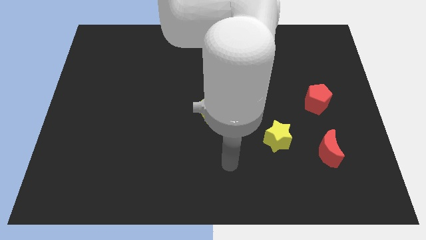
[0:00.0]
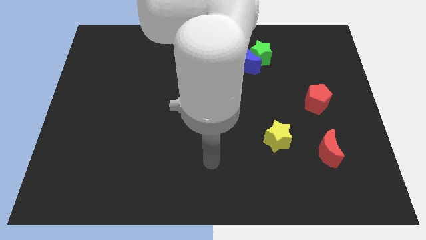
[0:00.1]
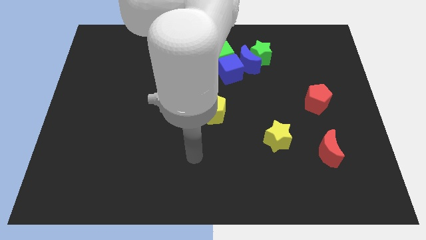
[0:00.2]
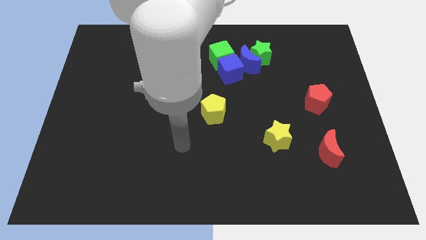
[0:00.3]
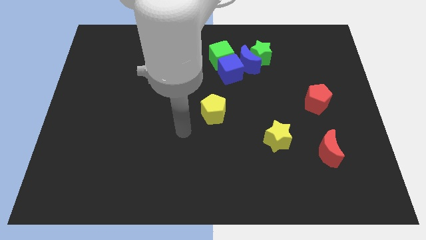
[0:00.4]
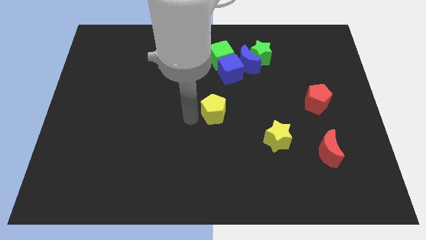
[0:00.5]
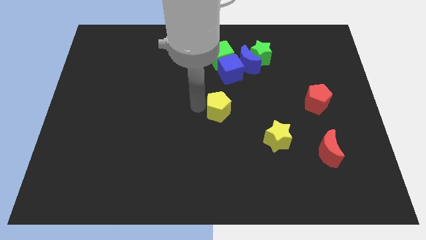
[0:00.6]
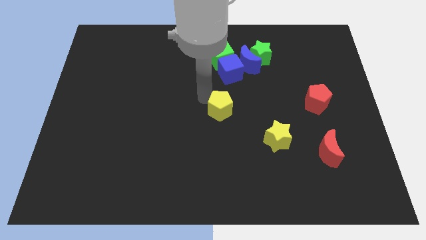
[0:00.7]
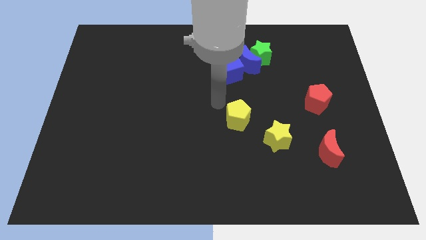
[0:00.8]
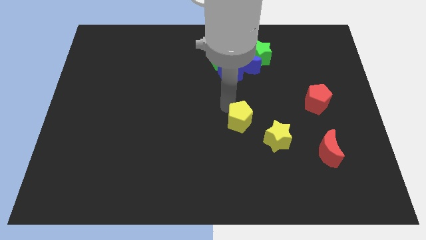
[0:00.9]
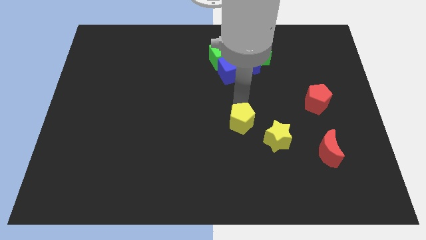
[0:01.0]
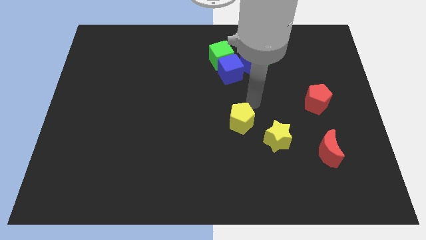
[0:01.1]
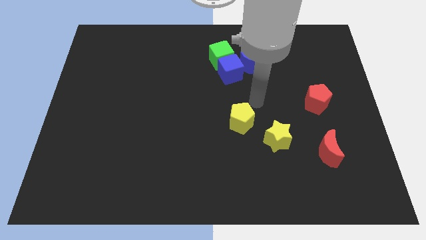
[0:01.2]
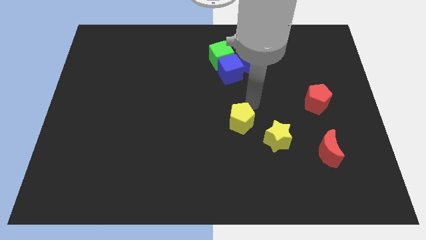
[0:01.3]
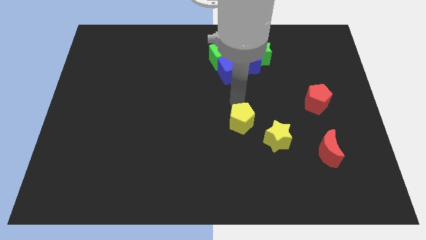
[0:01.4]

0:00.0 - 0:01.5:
move the yellow pentagon closer to the yellow star

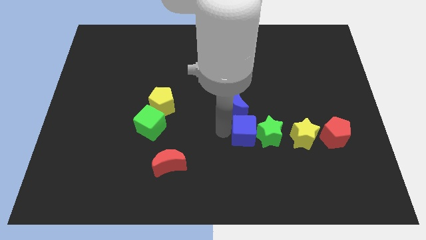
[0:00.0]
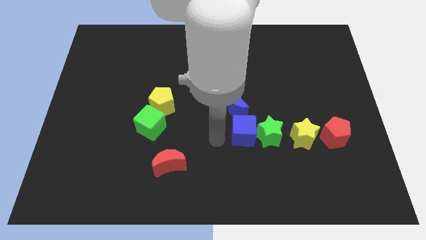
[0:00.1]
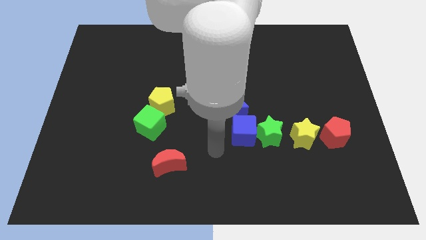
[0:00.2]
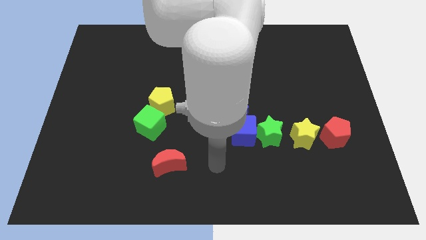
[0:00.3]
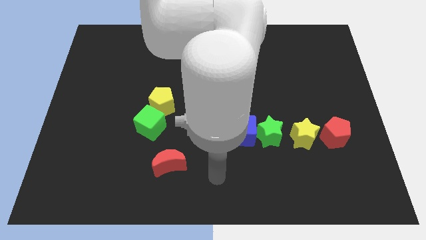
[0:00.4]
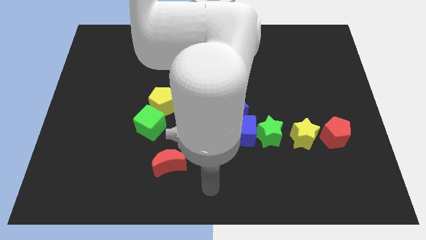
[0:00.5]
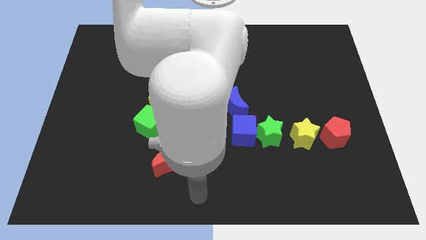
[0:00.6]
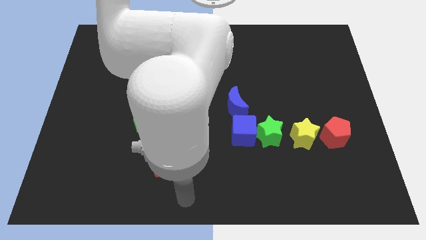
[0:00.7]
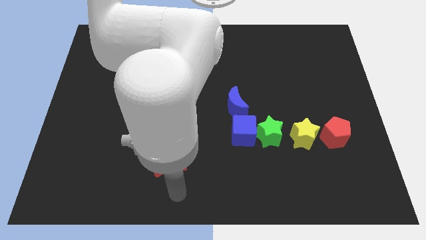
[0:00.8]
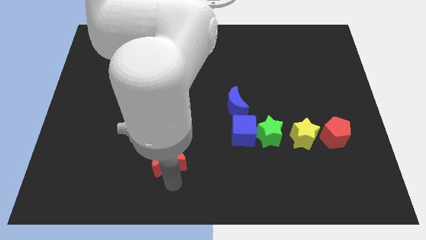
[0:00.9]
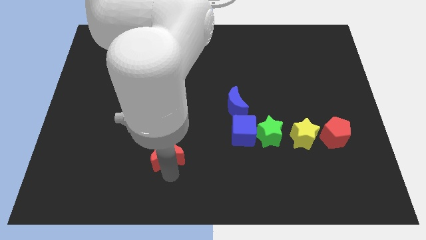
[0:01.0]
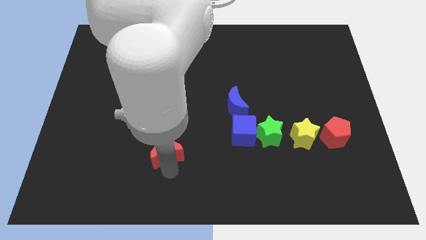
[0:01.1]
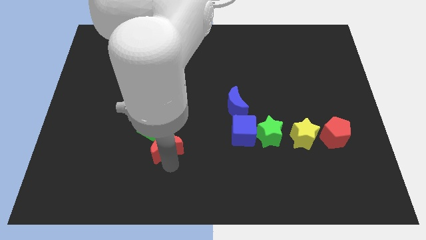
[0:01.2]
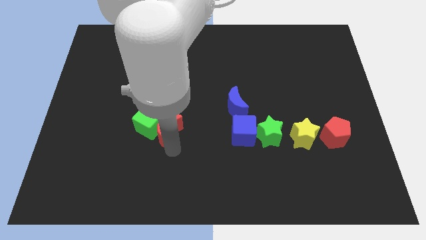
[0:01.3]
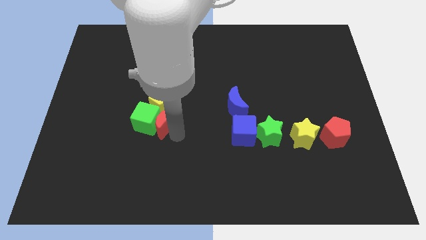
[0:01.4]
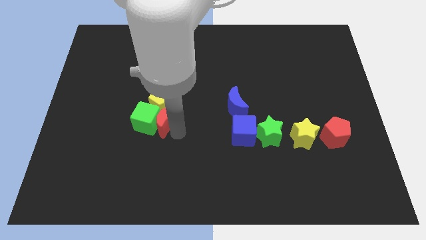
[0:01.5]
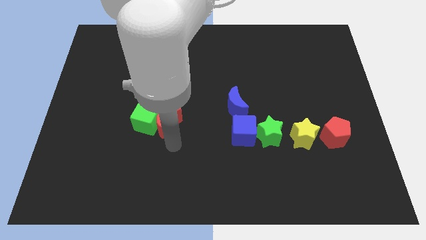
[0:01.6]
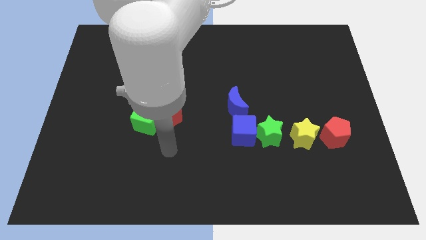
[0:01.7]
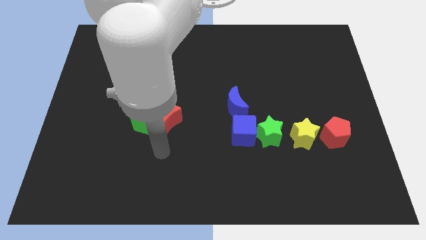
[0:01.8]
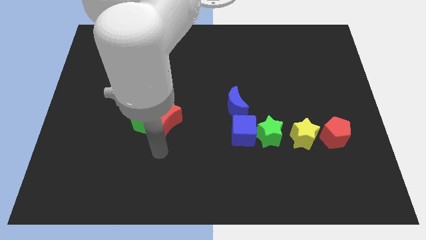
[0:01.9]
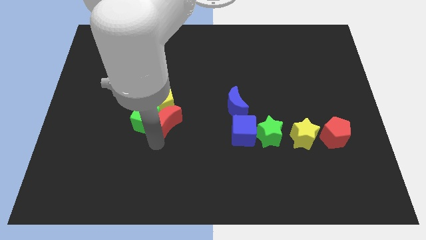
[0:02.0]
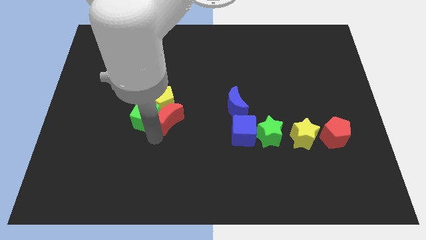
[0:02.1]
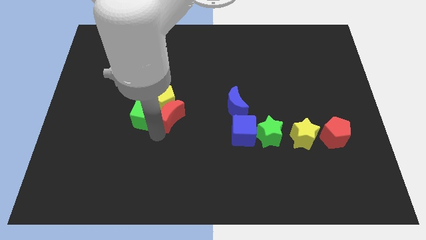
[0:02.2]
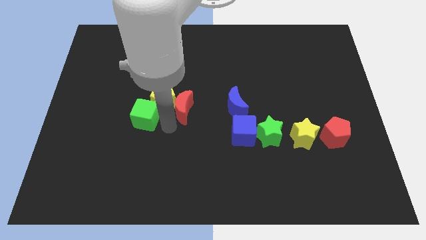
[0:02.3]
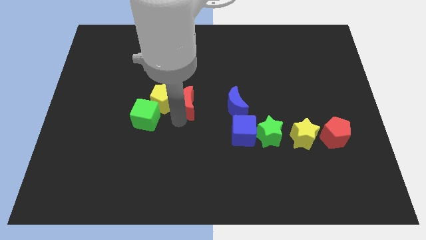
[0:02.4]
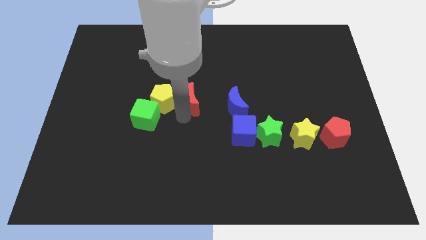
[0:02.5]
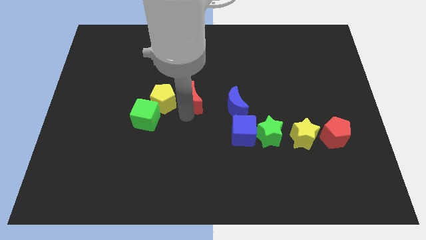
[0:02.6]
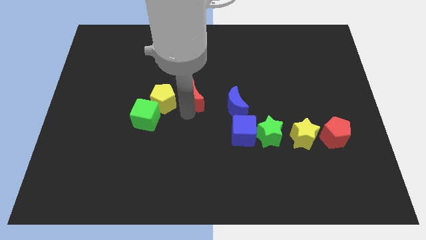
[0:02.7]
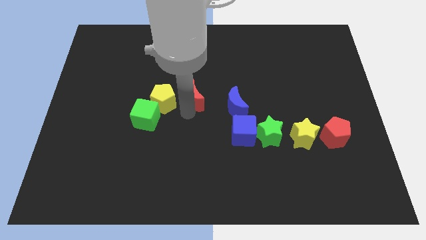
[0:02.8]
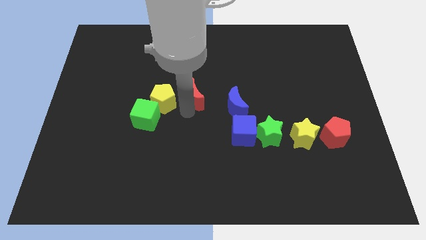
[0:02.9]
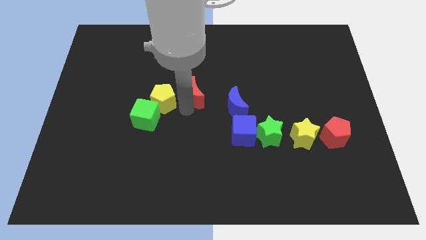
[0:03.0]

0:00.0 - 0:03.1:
move the red crescent right to the yellow pentagon

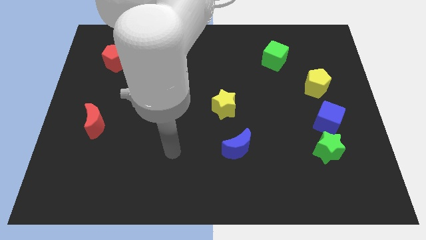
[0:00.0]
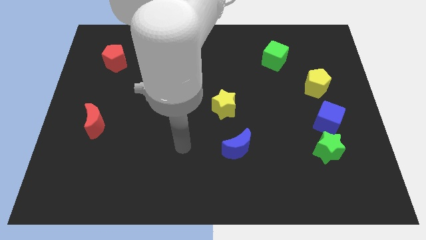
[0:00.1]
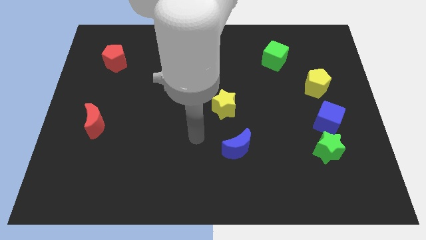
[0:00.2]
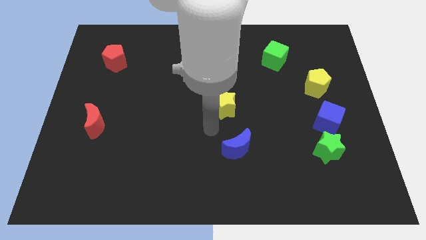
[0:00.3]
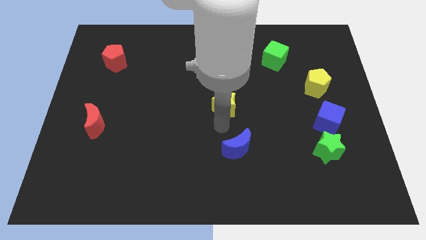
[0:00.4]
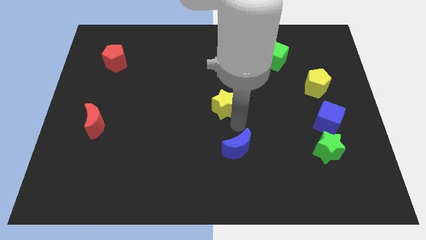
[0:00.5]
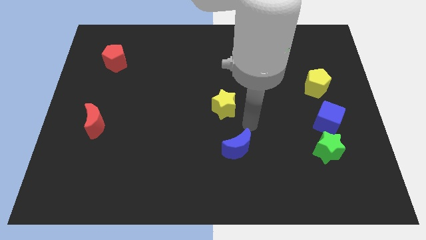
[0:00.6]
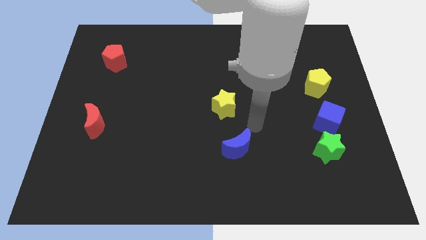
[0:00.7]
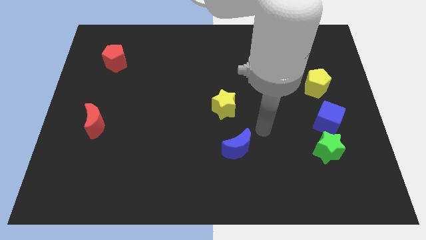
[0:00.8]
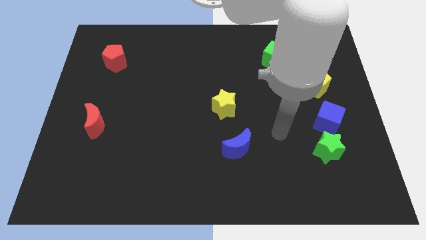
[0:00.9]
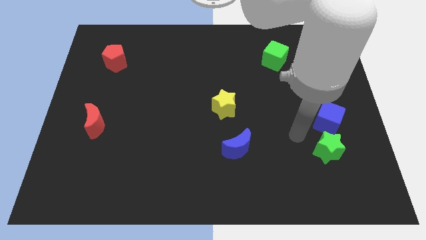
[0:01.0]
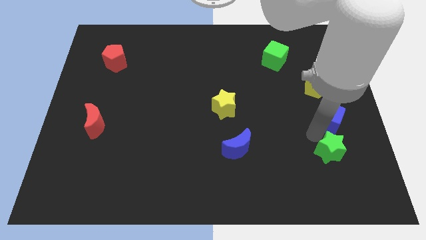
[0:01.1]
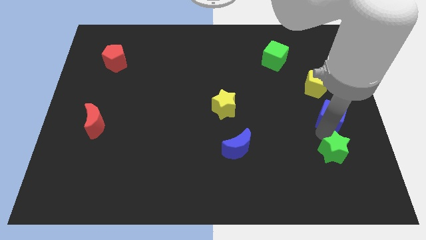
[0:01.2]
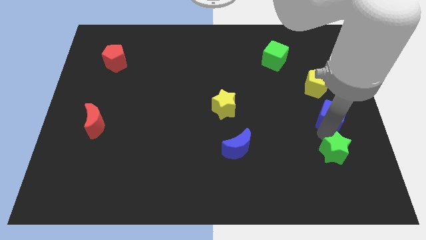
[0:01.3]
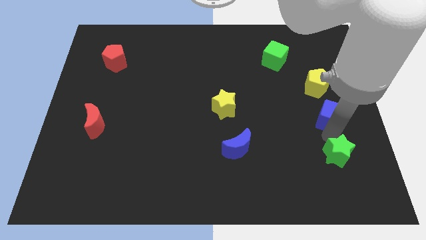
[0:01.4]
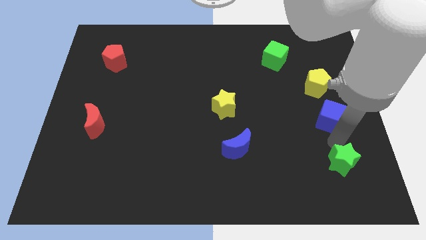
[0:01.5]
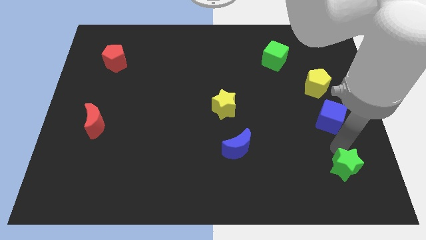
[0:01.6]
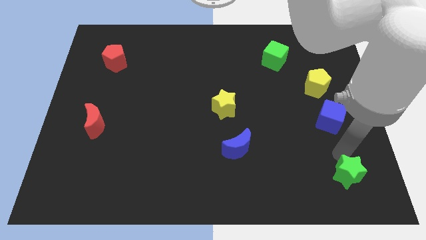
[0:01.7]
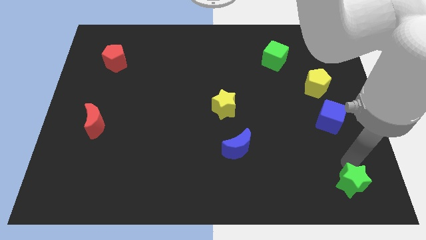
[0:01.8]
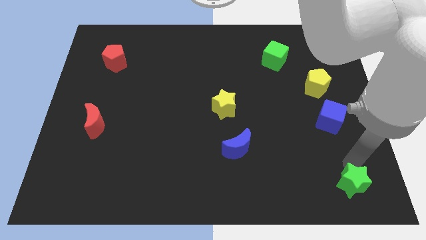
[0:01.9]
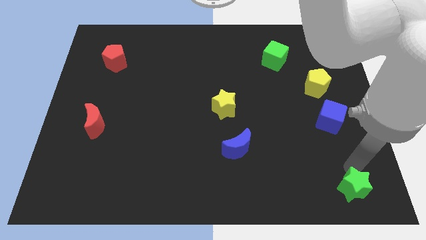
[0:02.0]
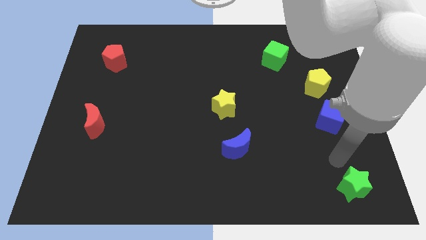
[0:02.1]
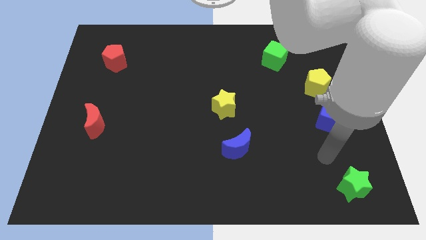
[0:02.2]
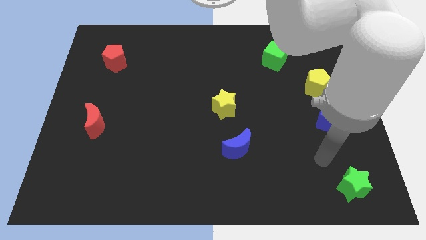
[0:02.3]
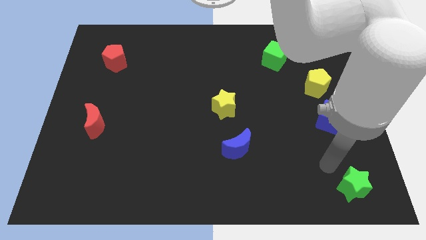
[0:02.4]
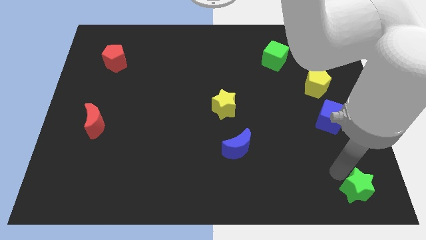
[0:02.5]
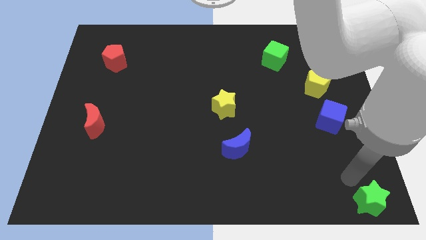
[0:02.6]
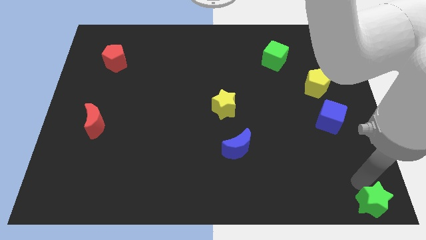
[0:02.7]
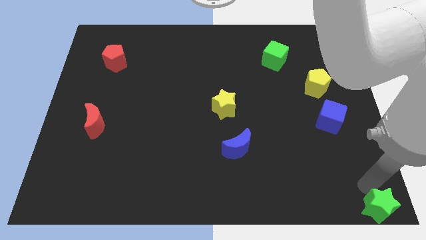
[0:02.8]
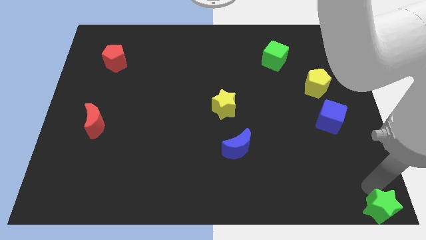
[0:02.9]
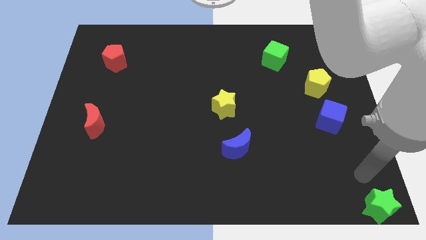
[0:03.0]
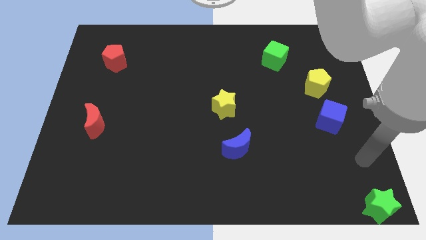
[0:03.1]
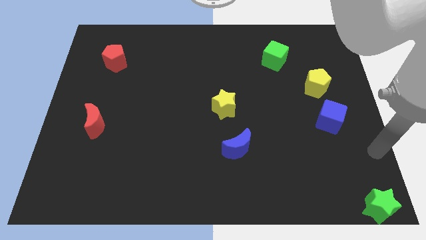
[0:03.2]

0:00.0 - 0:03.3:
place the green star at the bottom right corner of the board

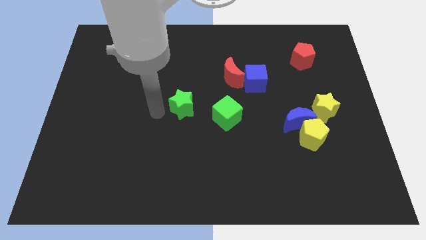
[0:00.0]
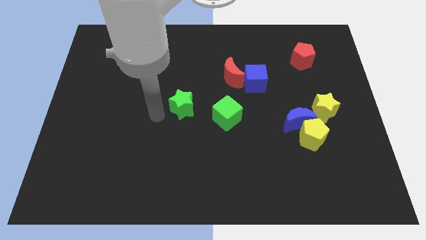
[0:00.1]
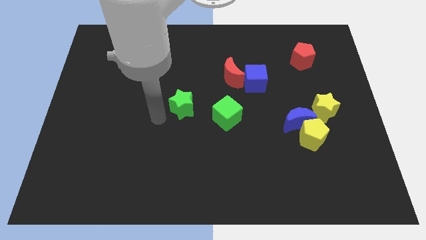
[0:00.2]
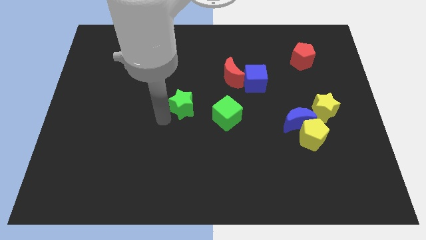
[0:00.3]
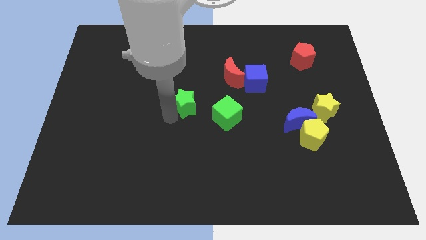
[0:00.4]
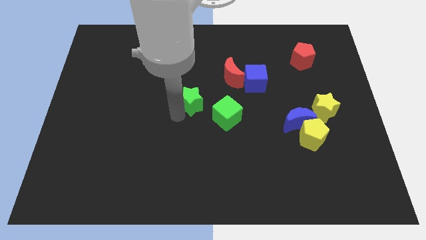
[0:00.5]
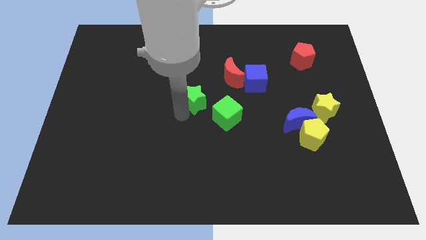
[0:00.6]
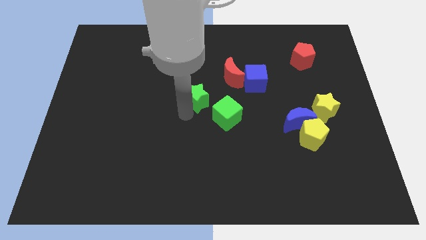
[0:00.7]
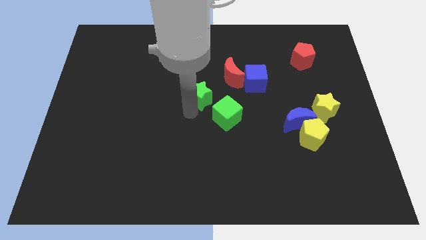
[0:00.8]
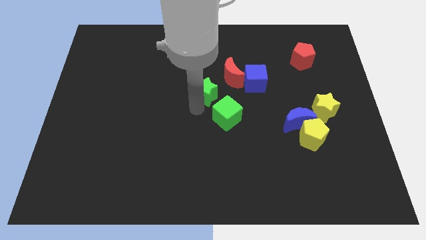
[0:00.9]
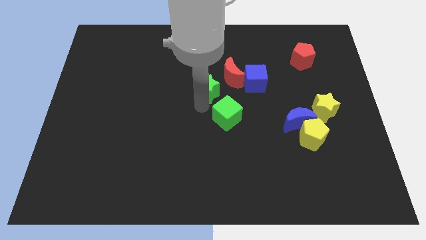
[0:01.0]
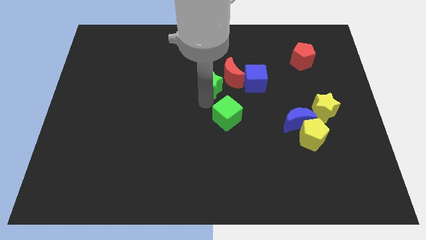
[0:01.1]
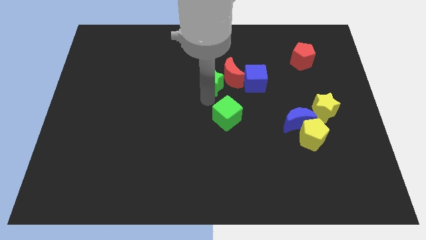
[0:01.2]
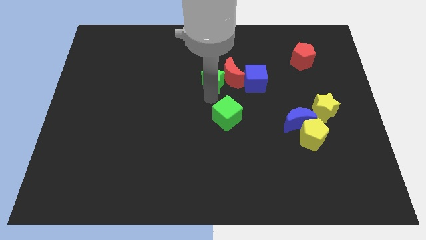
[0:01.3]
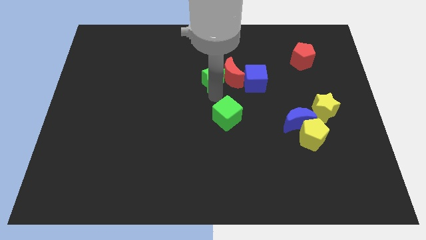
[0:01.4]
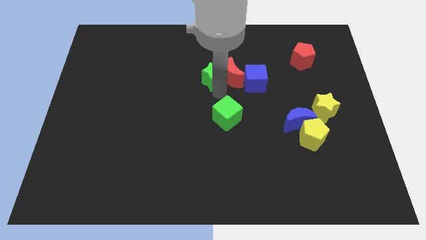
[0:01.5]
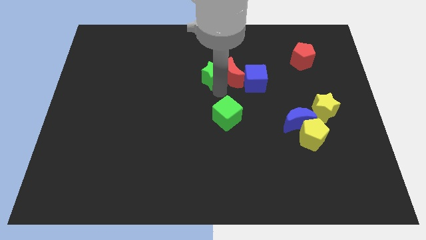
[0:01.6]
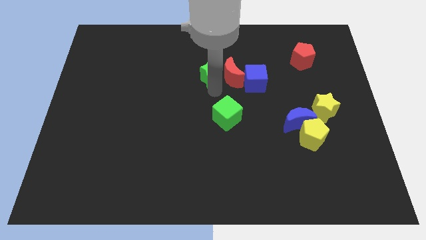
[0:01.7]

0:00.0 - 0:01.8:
move the green star left to the red crescent
